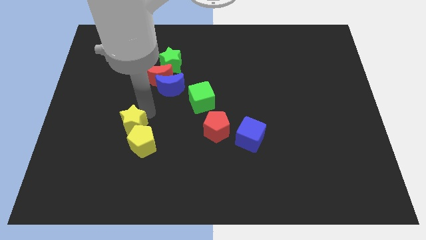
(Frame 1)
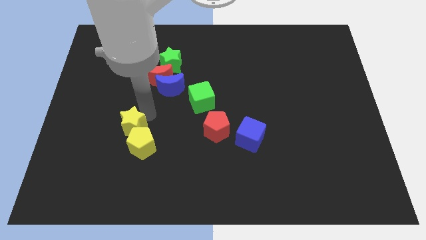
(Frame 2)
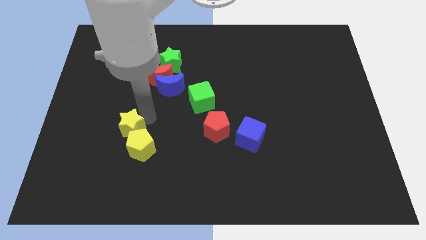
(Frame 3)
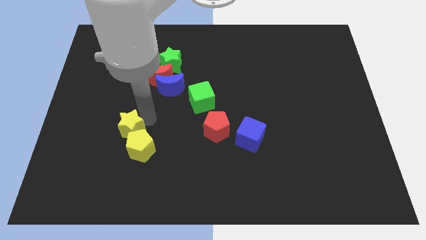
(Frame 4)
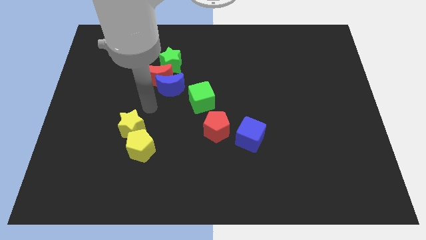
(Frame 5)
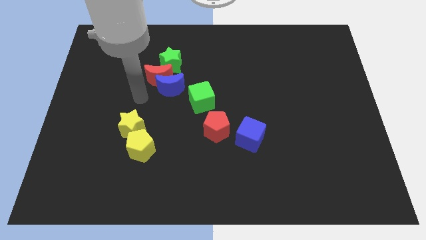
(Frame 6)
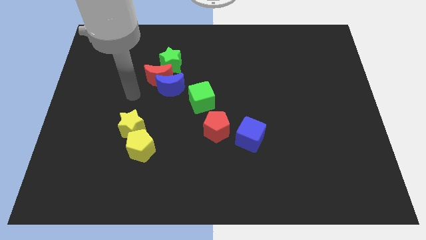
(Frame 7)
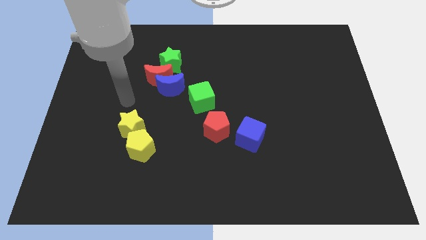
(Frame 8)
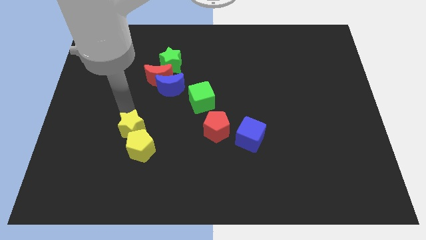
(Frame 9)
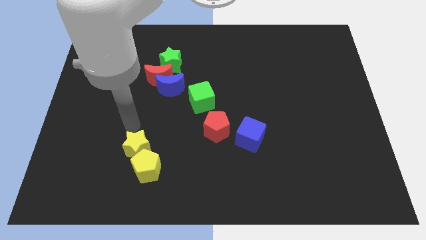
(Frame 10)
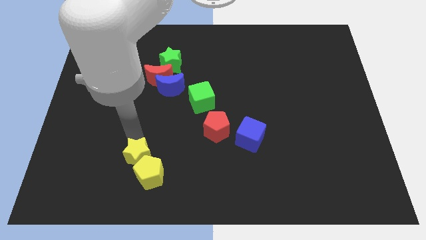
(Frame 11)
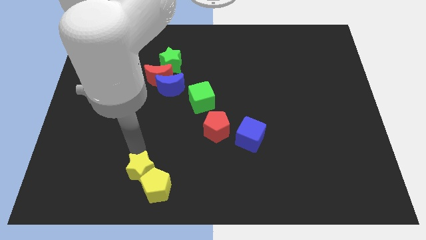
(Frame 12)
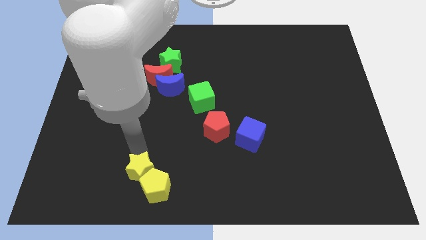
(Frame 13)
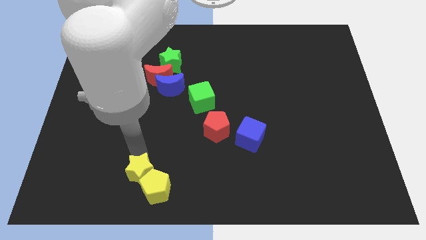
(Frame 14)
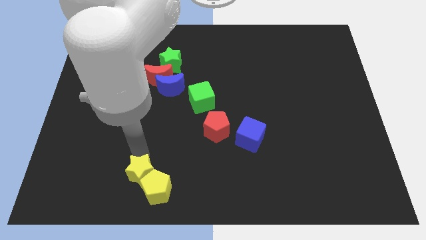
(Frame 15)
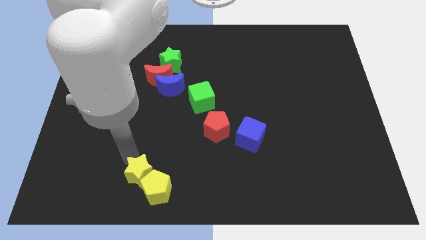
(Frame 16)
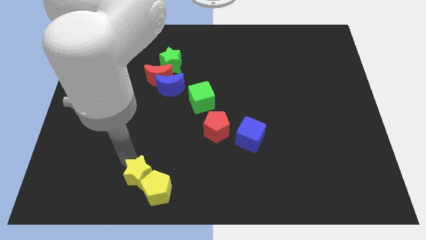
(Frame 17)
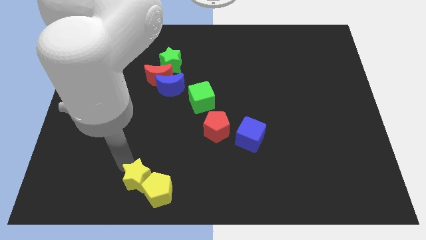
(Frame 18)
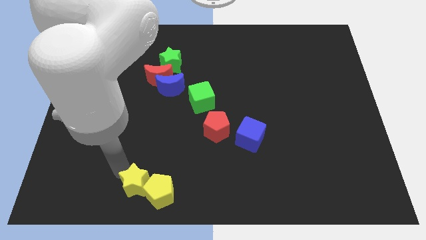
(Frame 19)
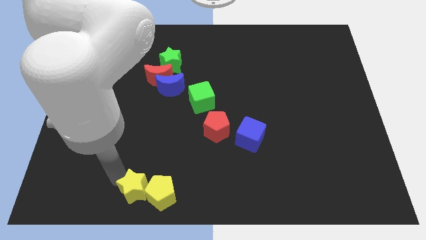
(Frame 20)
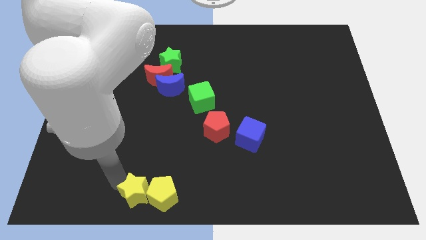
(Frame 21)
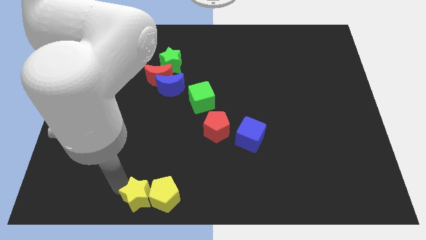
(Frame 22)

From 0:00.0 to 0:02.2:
drag yellow star along with yellow pentagon towards bottom center

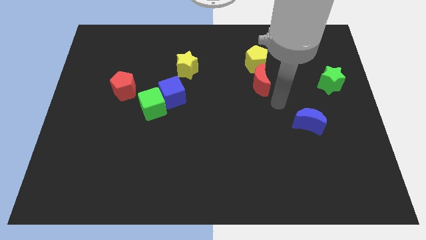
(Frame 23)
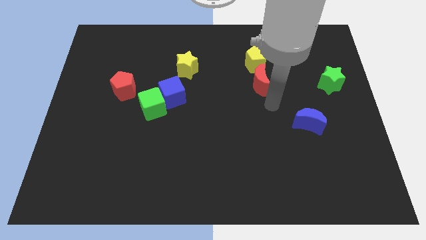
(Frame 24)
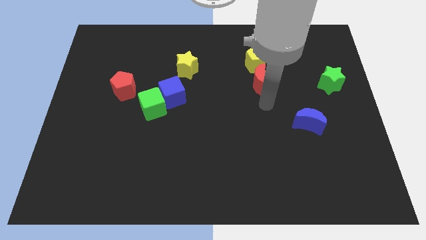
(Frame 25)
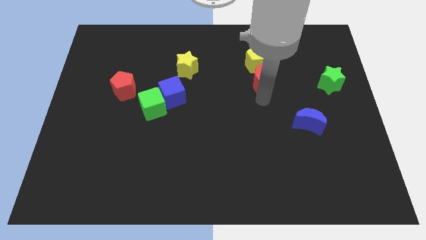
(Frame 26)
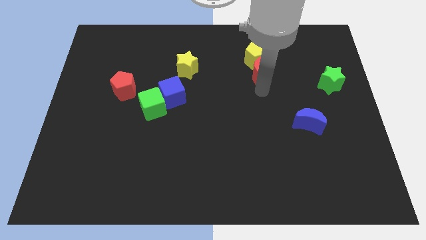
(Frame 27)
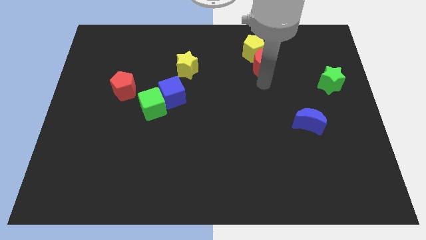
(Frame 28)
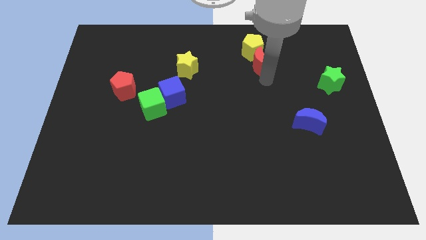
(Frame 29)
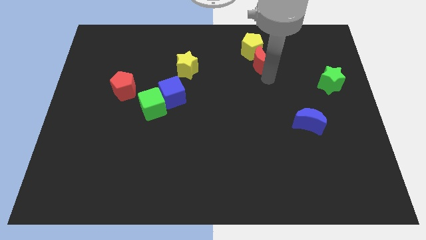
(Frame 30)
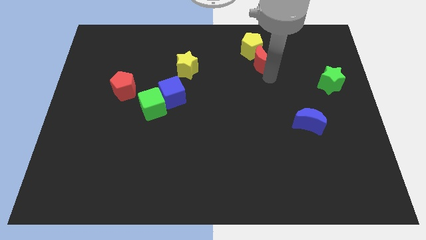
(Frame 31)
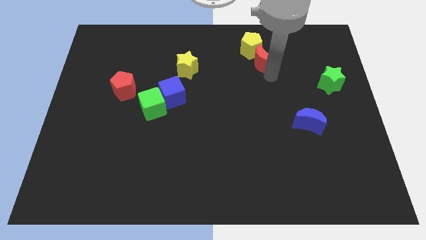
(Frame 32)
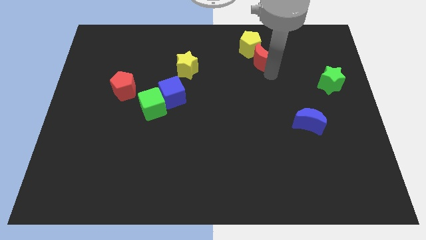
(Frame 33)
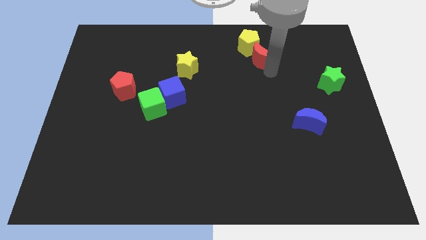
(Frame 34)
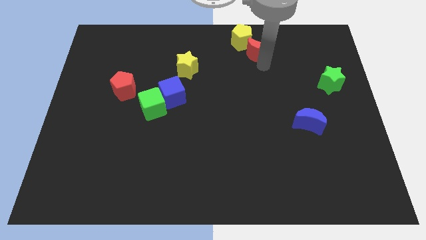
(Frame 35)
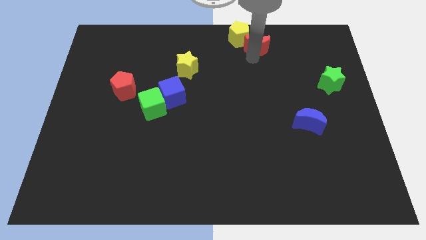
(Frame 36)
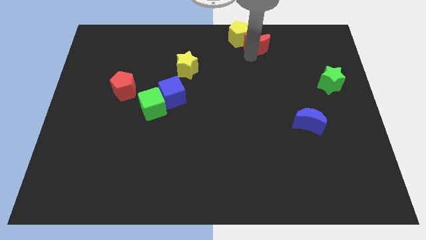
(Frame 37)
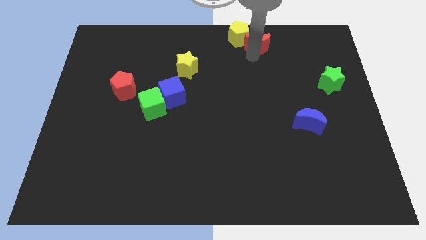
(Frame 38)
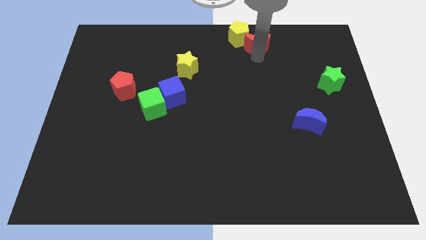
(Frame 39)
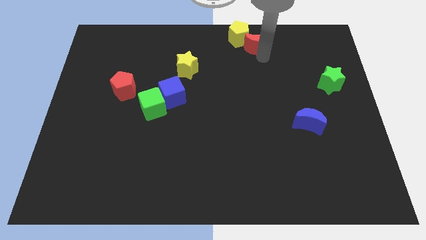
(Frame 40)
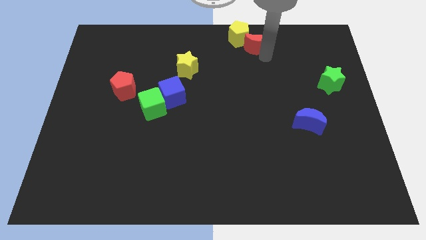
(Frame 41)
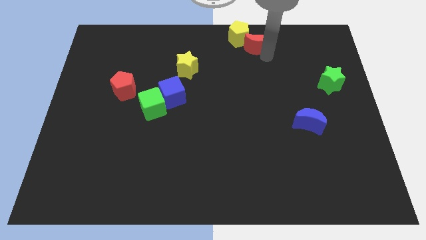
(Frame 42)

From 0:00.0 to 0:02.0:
move red moon and yellow pentagon towards top

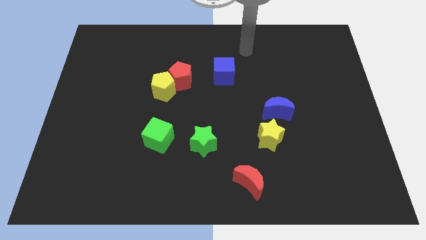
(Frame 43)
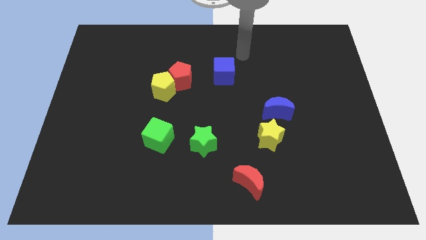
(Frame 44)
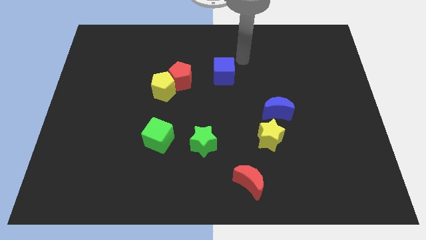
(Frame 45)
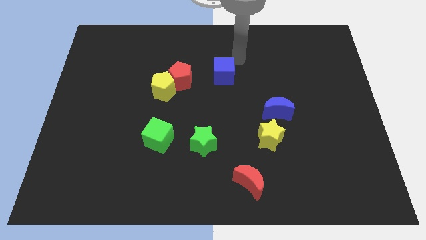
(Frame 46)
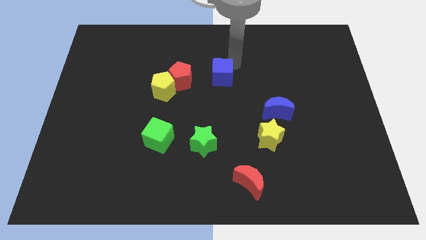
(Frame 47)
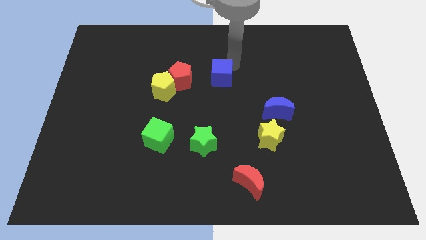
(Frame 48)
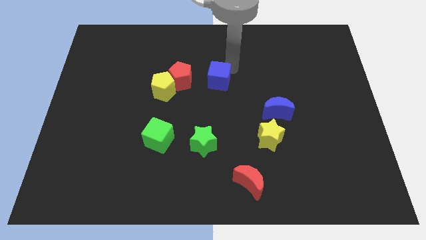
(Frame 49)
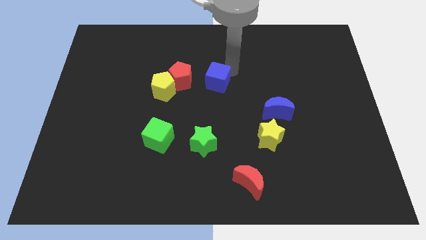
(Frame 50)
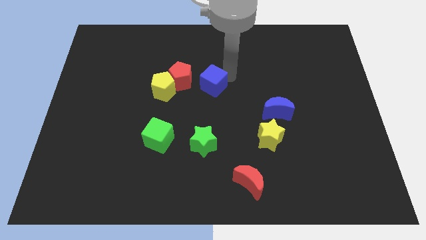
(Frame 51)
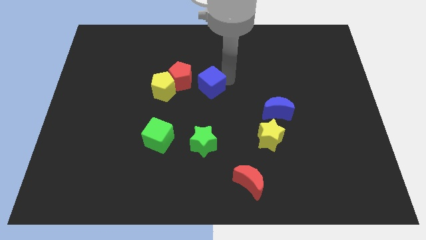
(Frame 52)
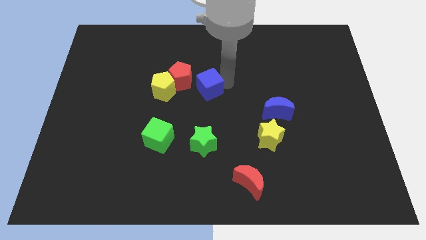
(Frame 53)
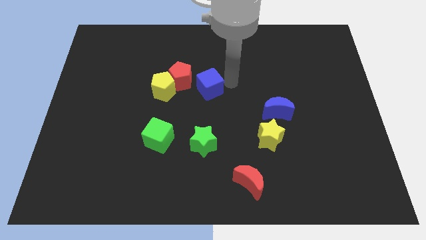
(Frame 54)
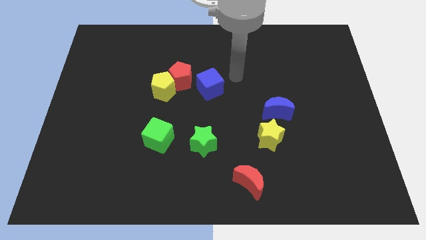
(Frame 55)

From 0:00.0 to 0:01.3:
push the blue cube to the center

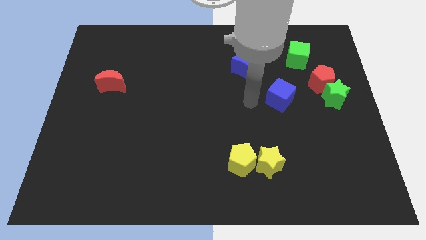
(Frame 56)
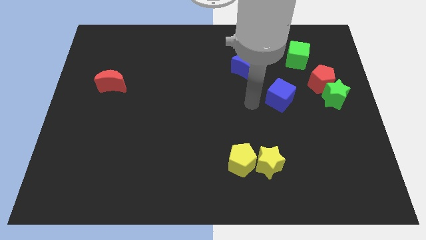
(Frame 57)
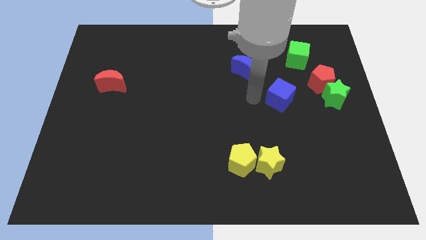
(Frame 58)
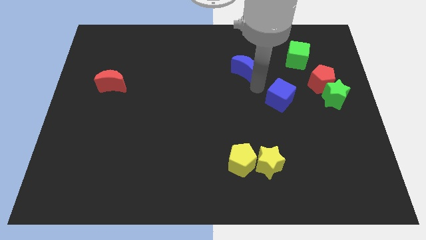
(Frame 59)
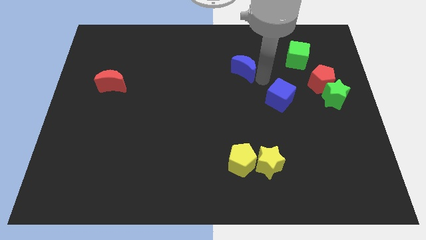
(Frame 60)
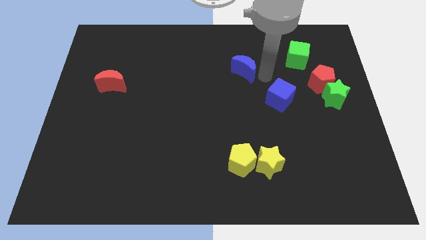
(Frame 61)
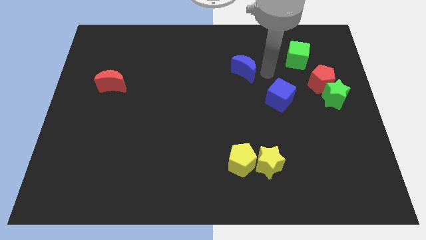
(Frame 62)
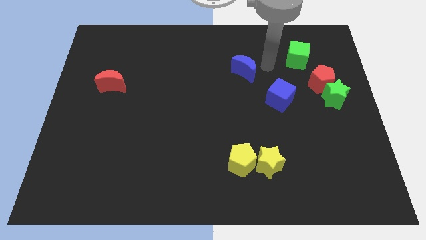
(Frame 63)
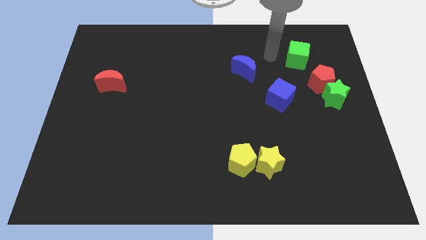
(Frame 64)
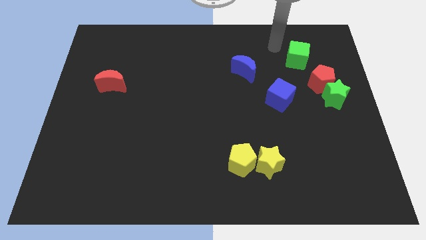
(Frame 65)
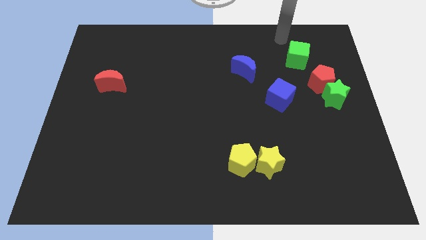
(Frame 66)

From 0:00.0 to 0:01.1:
move your arm to the top left of green cube

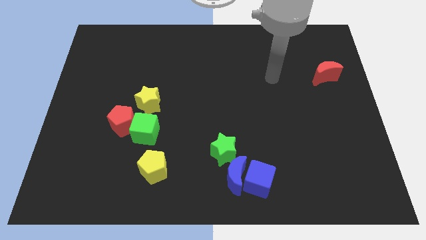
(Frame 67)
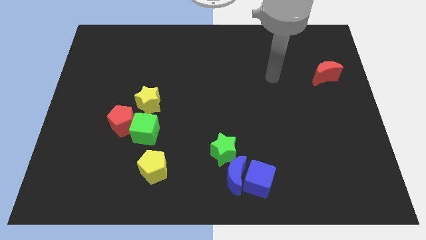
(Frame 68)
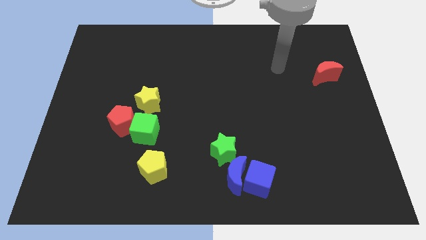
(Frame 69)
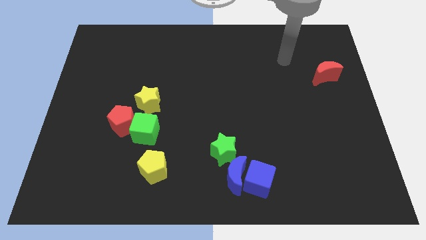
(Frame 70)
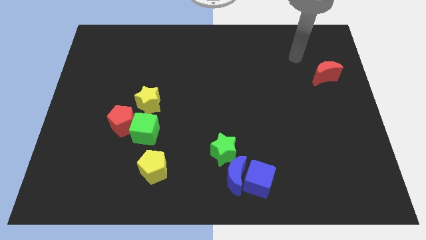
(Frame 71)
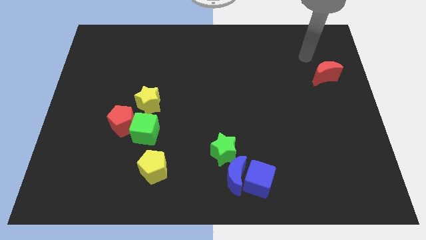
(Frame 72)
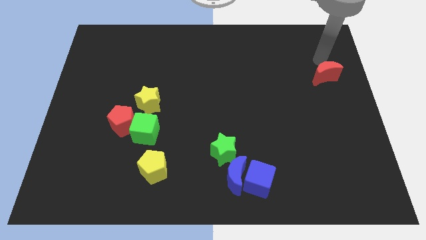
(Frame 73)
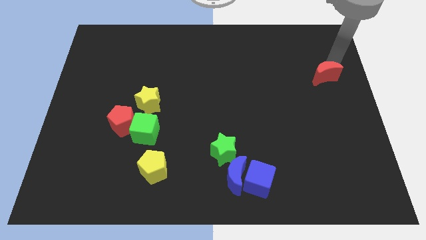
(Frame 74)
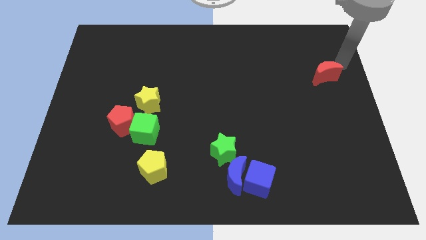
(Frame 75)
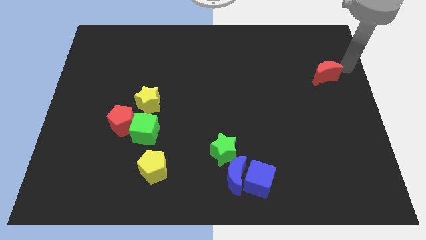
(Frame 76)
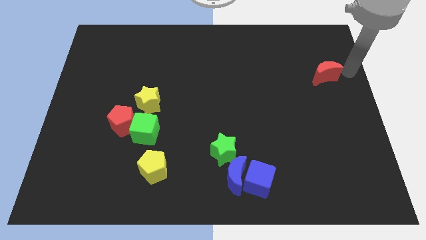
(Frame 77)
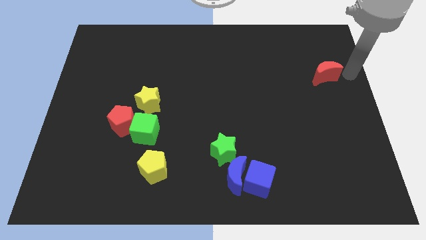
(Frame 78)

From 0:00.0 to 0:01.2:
place your arm to the right of red moon

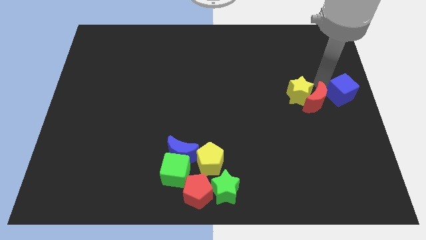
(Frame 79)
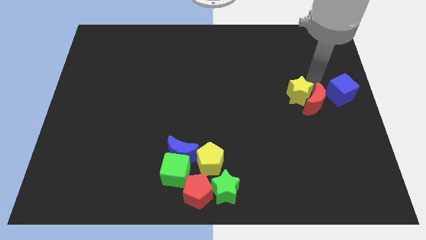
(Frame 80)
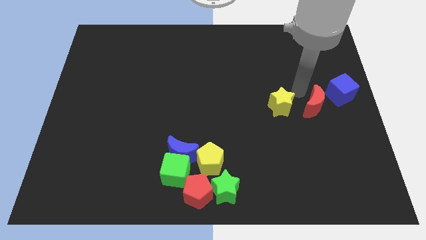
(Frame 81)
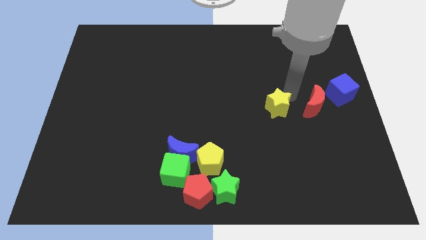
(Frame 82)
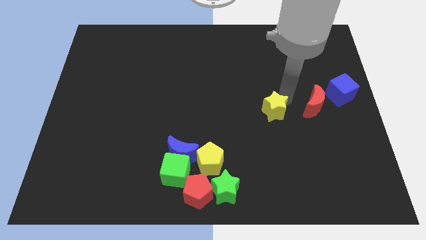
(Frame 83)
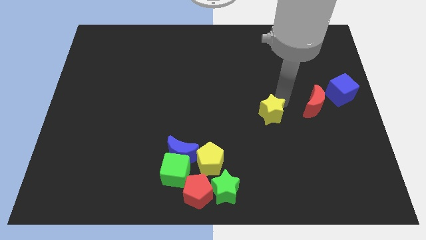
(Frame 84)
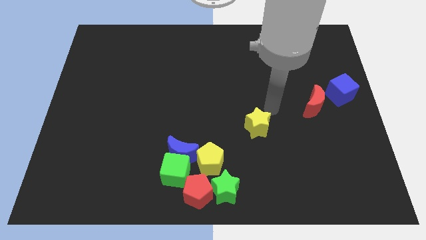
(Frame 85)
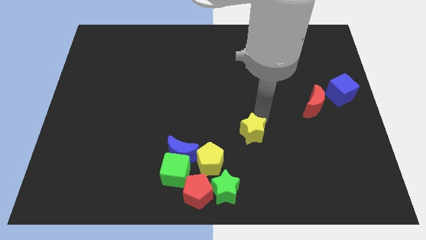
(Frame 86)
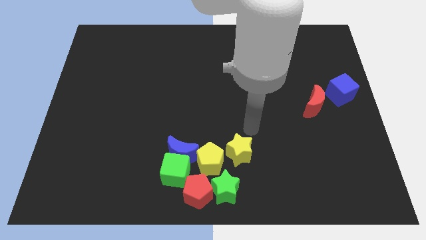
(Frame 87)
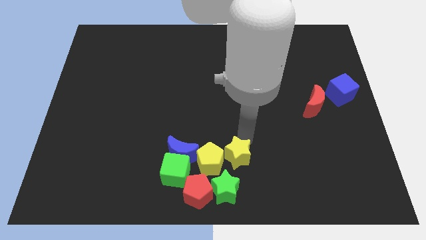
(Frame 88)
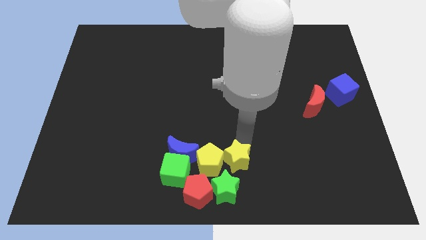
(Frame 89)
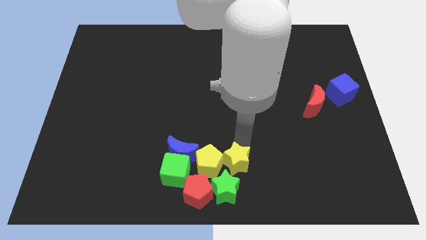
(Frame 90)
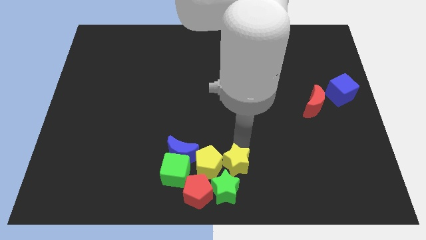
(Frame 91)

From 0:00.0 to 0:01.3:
move the yellow star into the yellow pentagon
